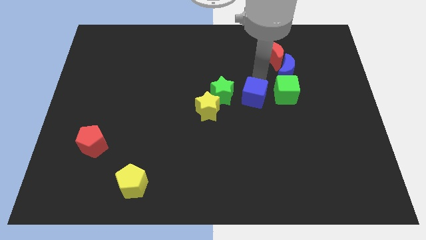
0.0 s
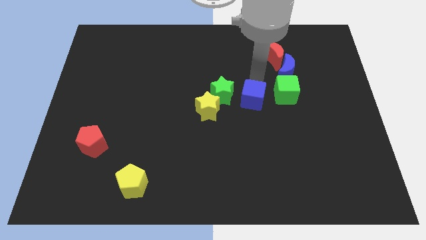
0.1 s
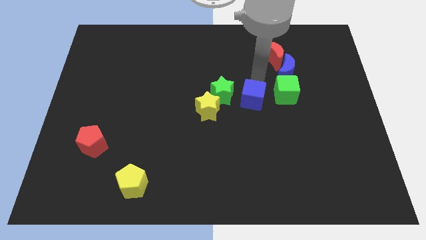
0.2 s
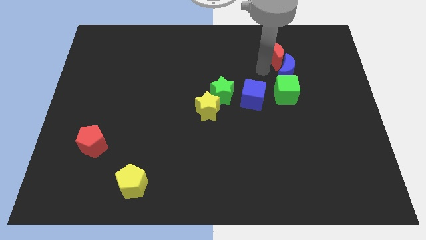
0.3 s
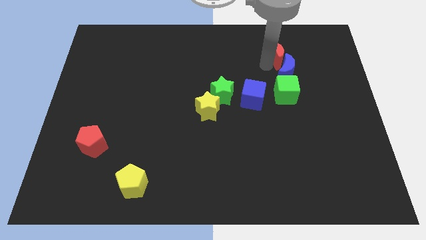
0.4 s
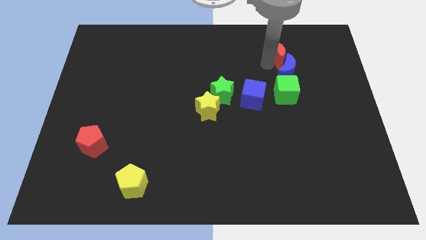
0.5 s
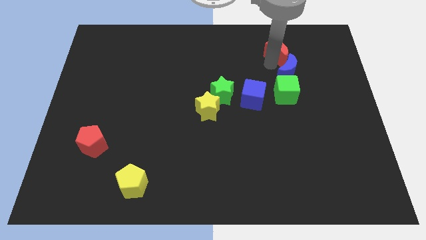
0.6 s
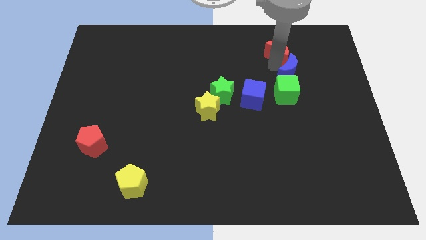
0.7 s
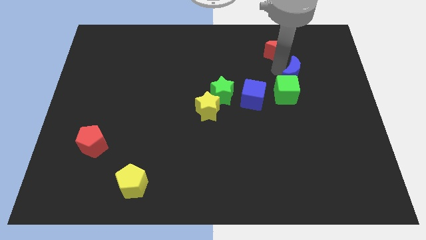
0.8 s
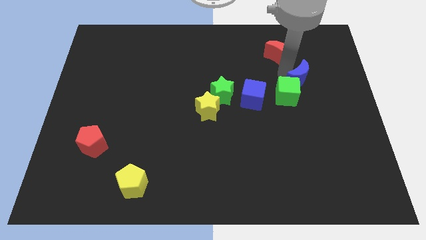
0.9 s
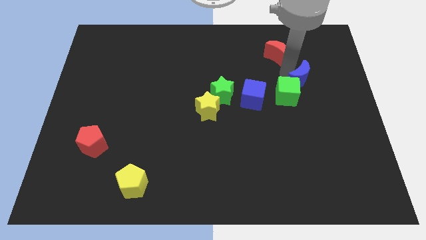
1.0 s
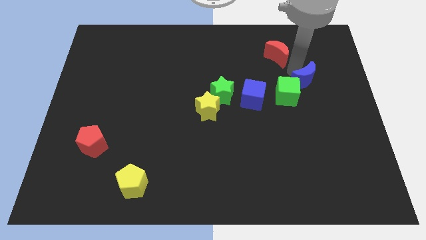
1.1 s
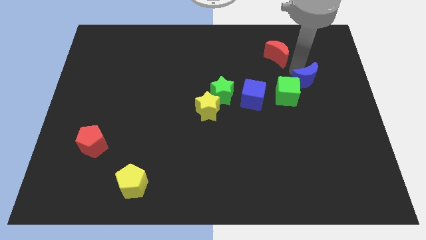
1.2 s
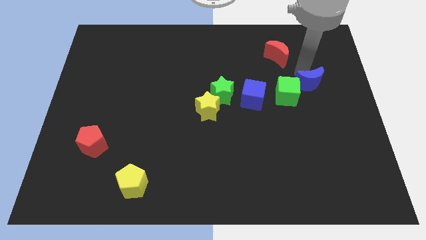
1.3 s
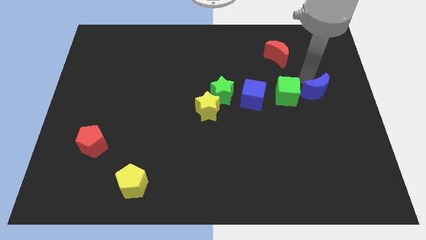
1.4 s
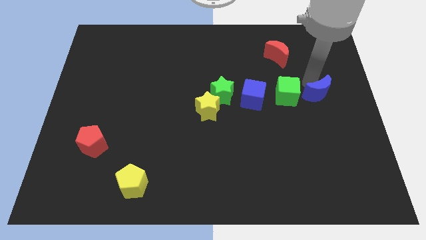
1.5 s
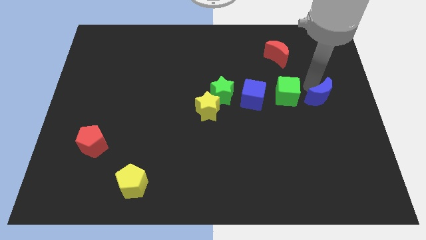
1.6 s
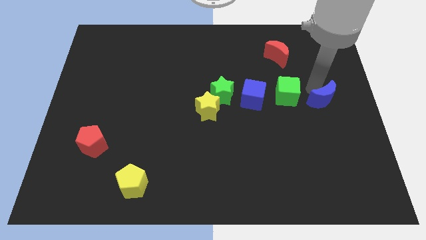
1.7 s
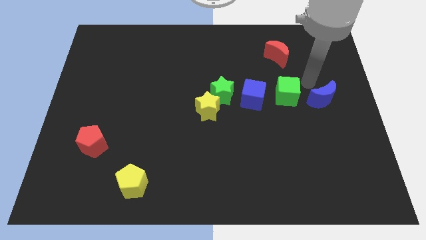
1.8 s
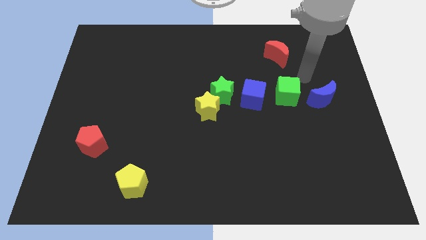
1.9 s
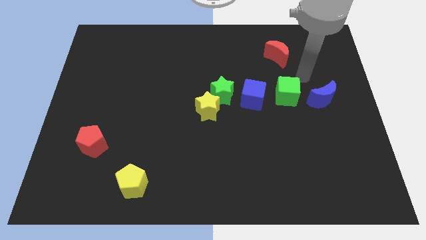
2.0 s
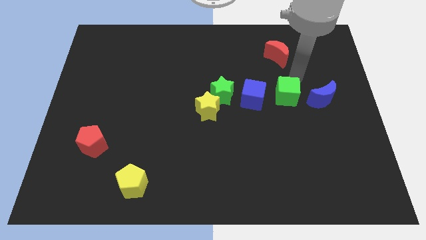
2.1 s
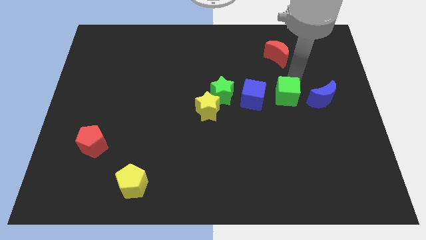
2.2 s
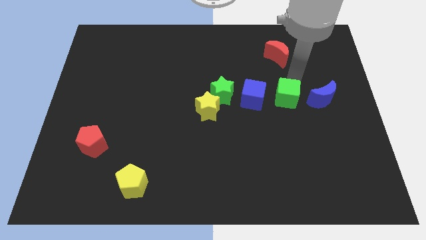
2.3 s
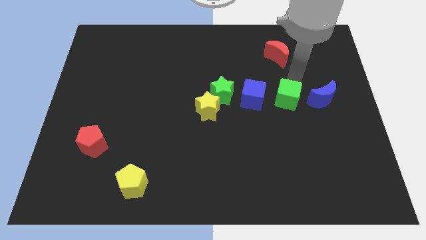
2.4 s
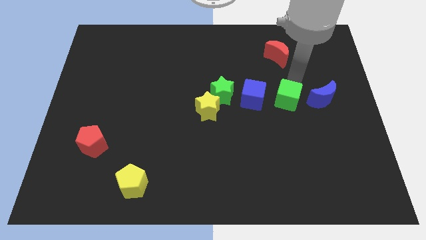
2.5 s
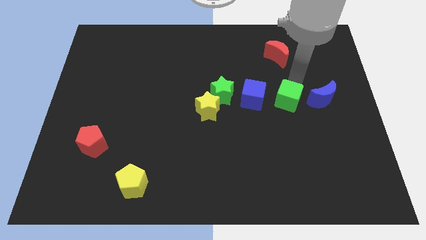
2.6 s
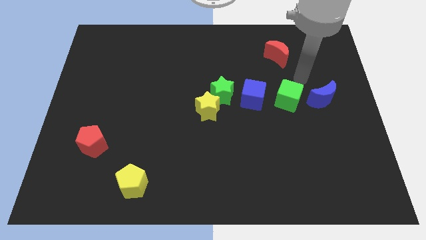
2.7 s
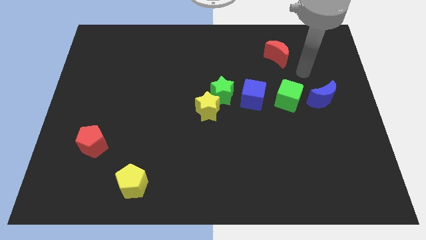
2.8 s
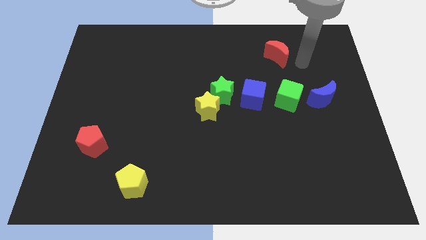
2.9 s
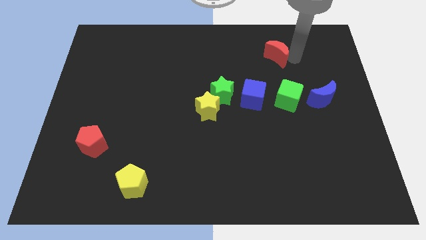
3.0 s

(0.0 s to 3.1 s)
place blue crescent on the right side of the green cube

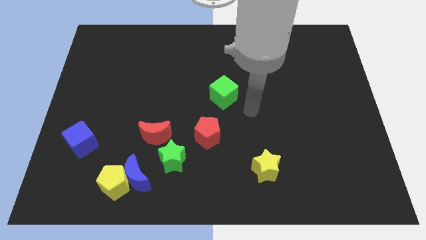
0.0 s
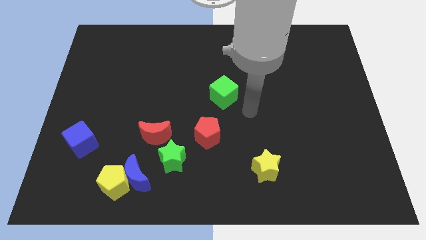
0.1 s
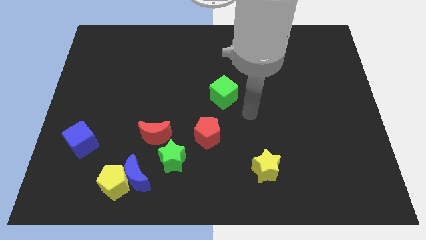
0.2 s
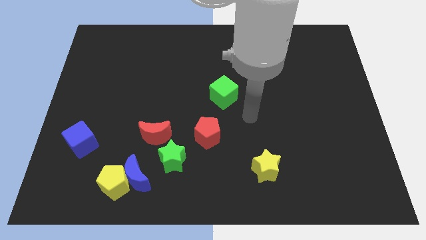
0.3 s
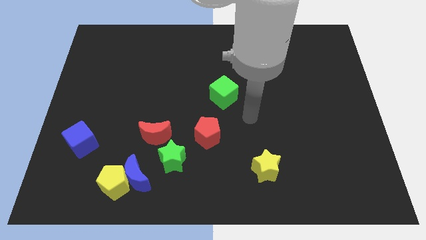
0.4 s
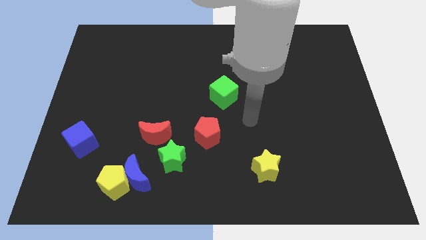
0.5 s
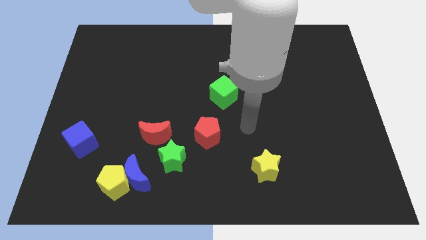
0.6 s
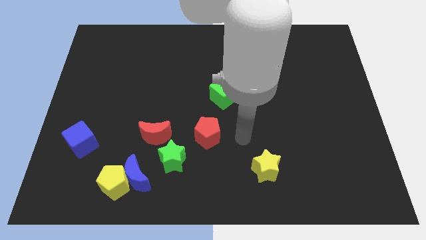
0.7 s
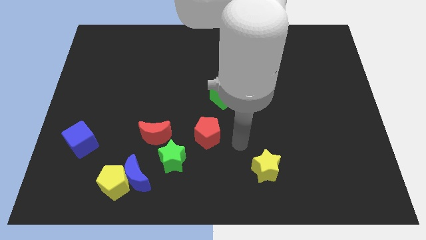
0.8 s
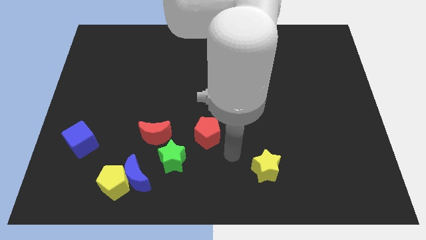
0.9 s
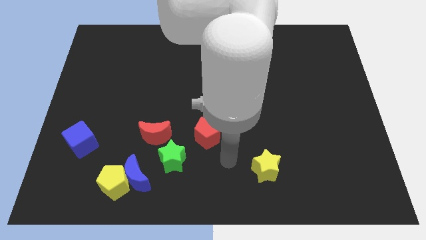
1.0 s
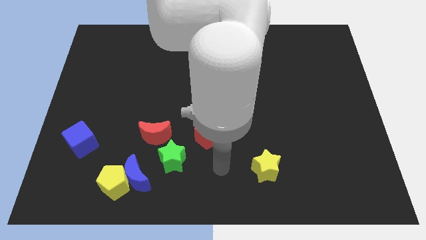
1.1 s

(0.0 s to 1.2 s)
place your arm below red pentagon

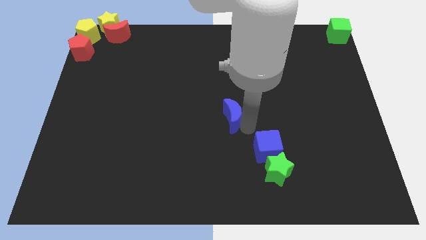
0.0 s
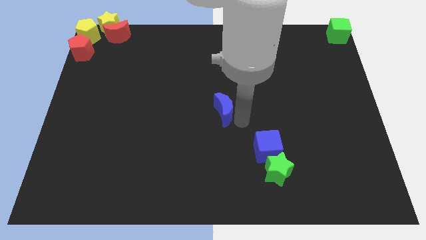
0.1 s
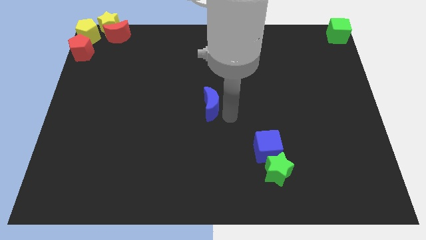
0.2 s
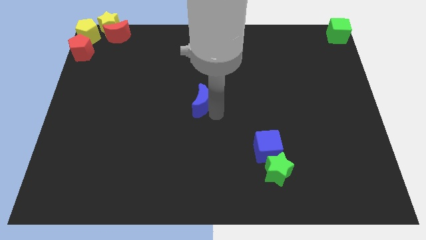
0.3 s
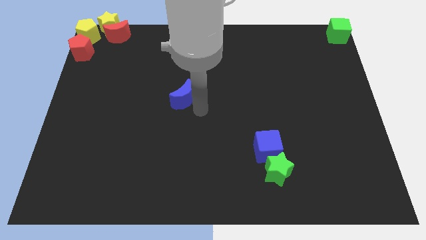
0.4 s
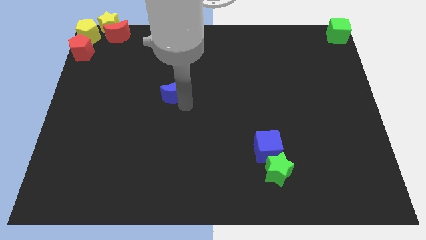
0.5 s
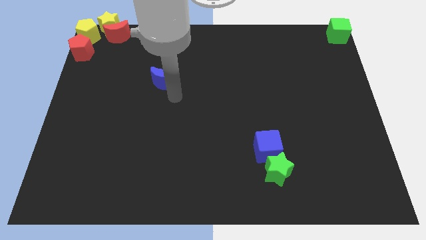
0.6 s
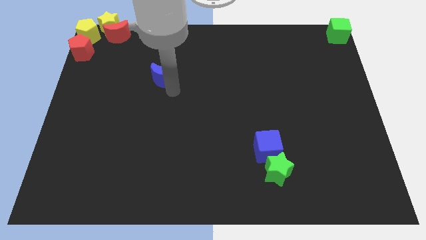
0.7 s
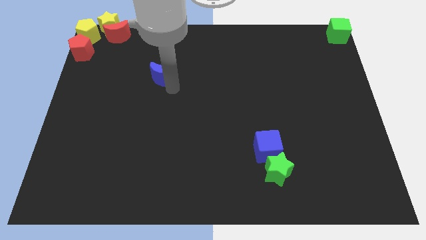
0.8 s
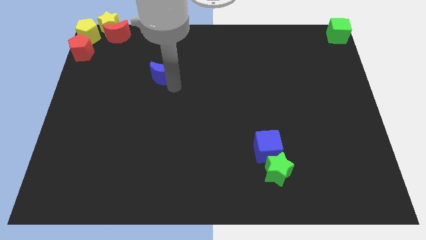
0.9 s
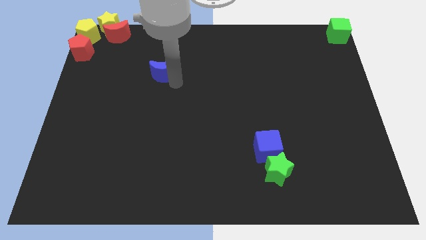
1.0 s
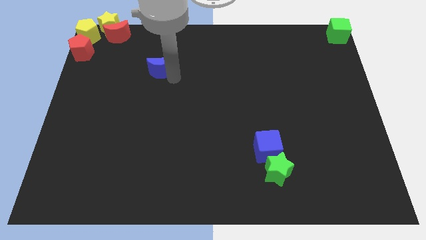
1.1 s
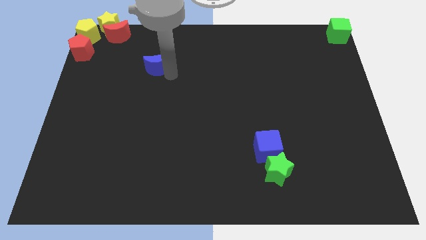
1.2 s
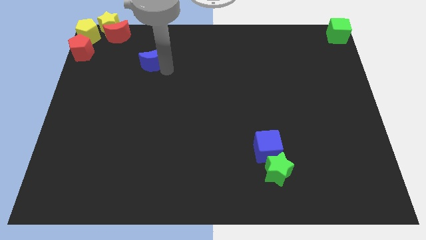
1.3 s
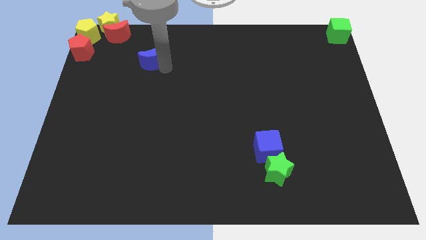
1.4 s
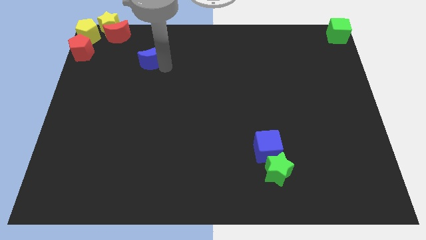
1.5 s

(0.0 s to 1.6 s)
drag the blue moon towards red crescent

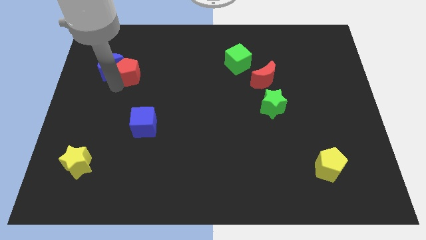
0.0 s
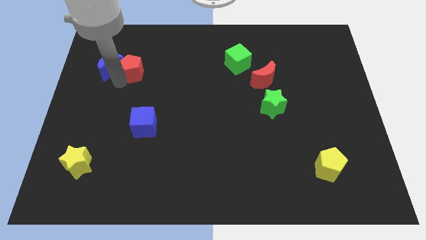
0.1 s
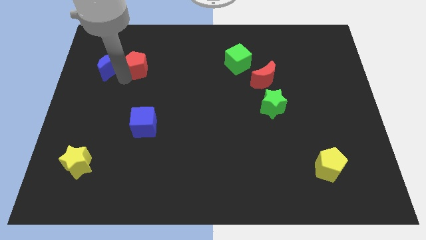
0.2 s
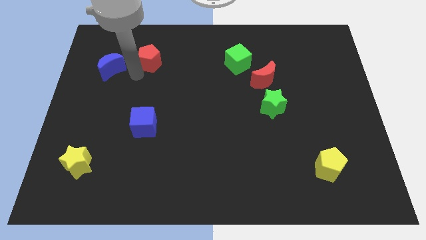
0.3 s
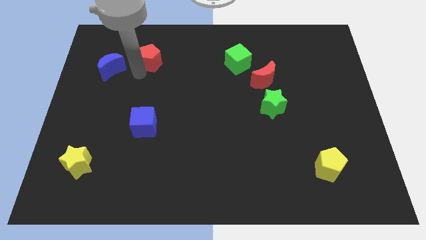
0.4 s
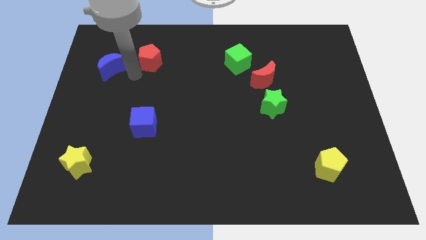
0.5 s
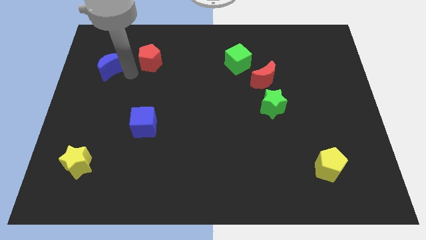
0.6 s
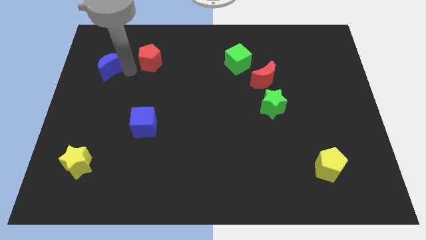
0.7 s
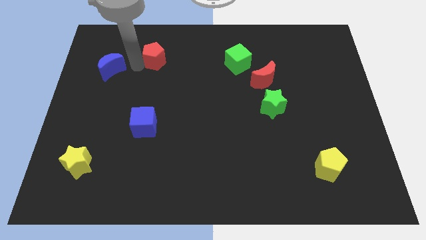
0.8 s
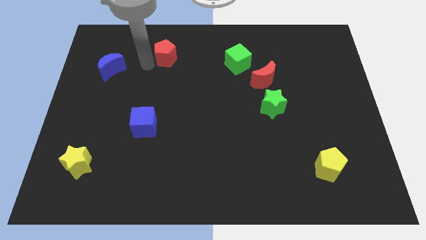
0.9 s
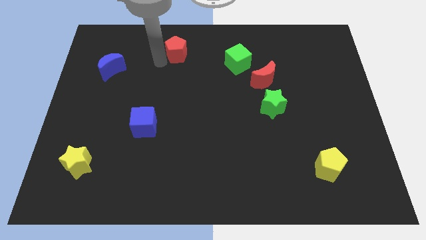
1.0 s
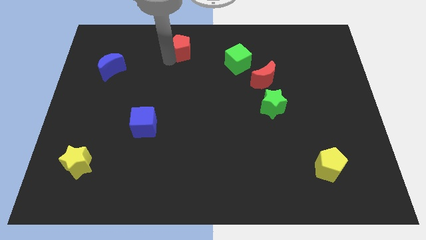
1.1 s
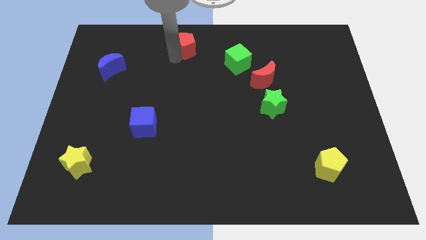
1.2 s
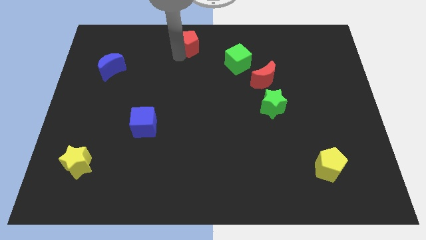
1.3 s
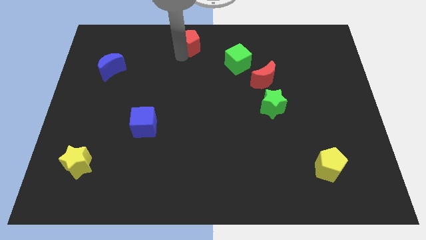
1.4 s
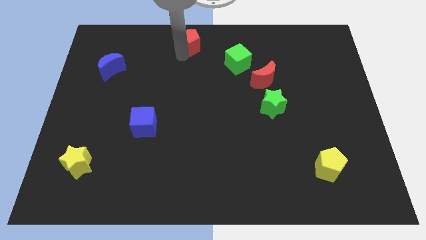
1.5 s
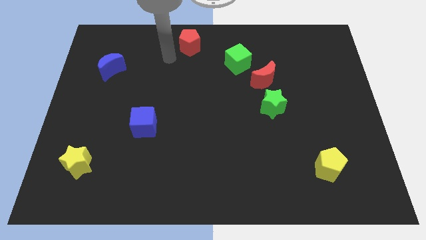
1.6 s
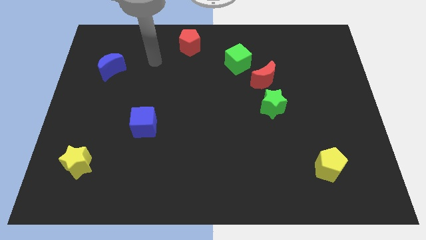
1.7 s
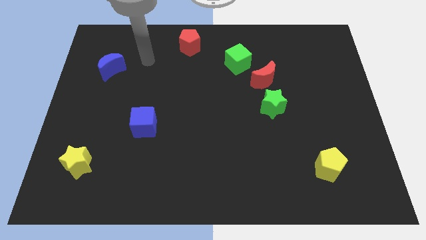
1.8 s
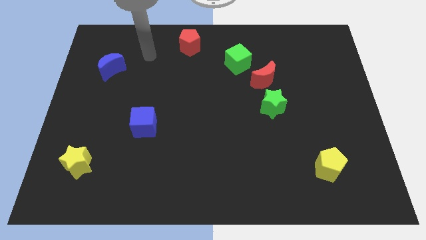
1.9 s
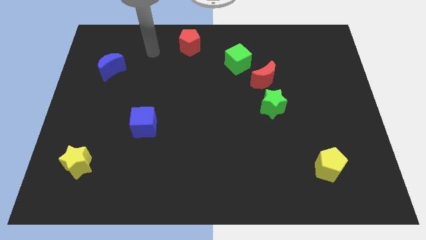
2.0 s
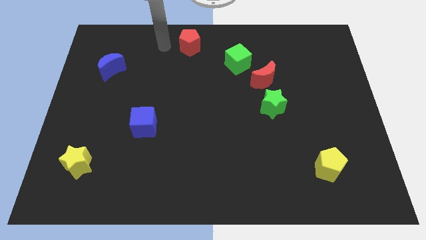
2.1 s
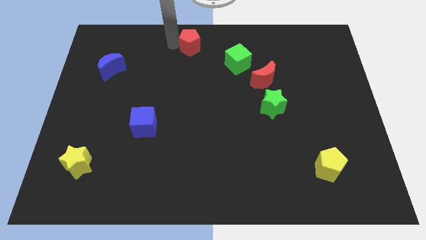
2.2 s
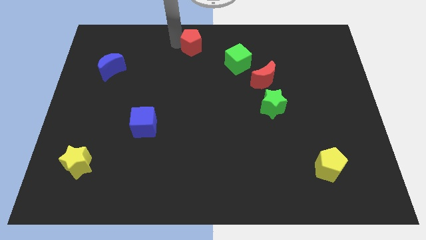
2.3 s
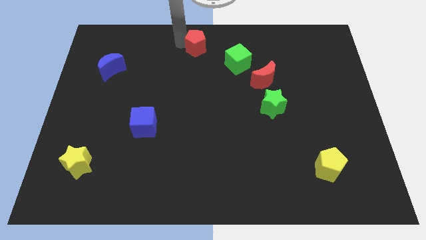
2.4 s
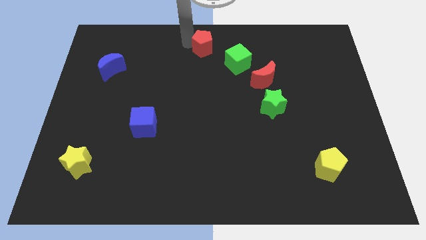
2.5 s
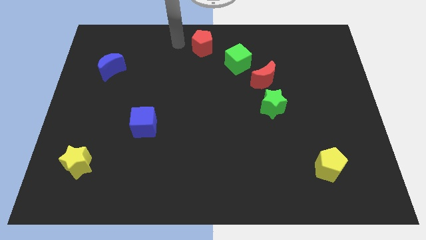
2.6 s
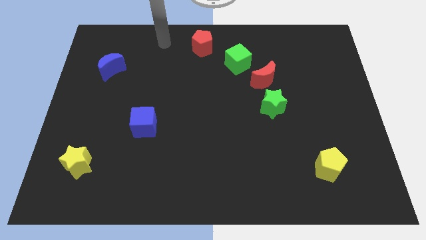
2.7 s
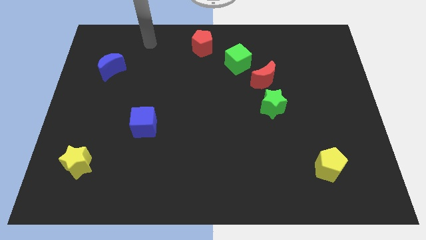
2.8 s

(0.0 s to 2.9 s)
push red pentagon towards top center of the board

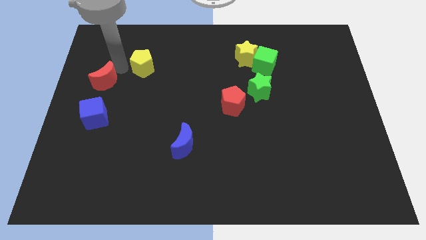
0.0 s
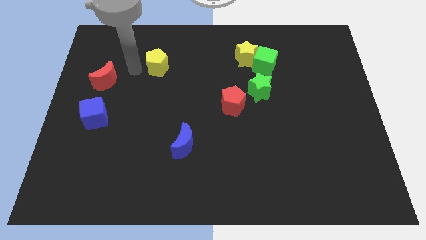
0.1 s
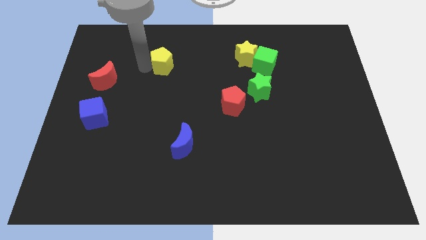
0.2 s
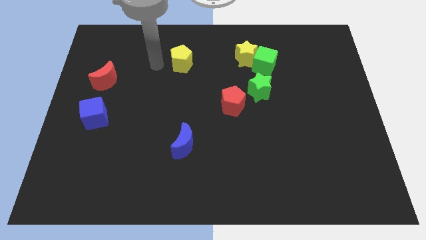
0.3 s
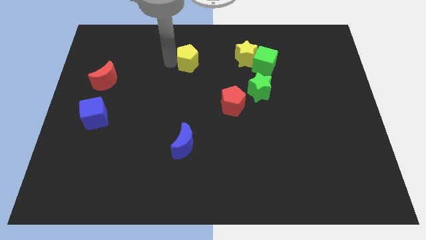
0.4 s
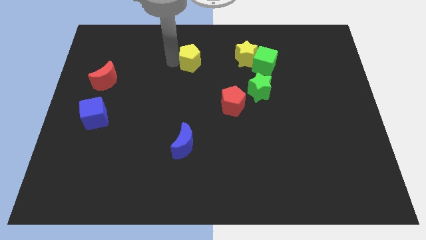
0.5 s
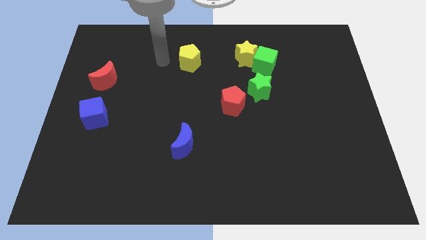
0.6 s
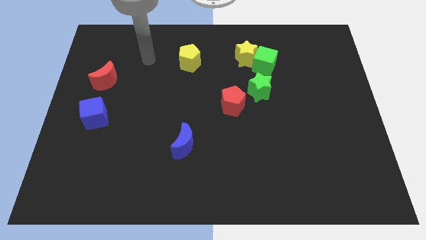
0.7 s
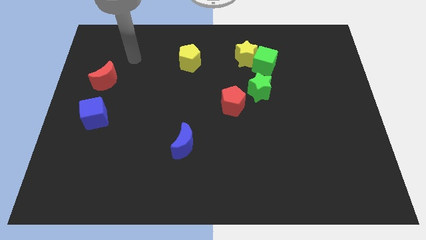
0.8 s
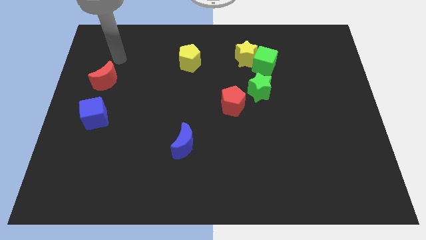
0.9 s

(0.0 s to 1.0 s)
place the yellow pentagon above the red pentagon
